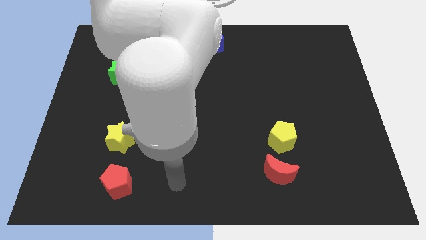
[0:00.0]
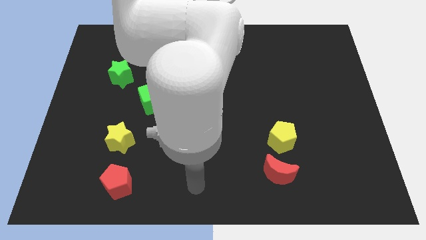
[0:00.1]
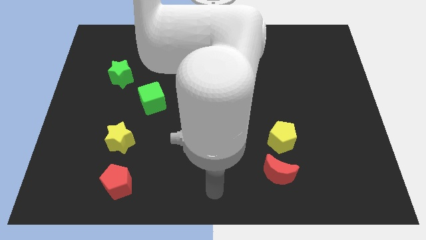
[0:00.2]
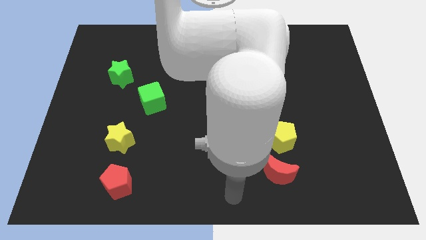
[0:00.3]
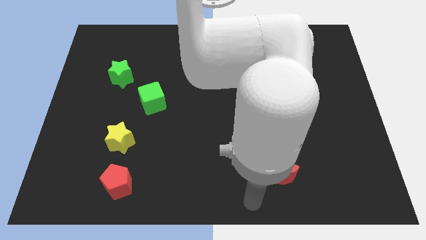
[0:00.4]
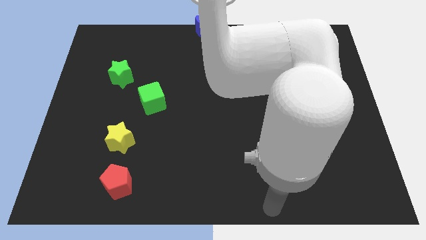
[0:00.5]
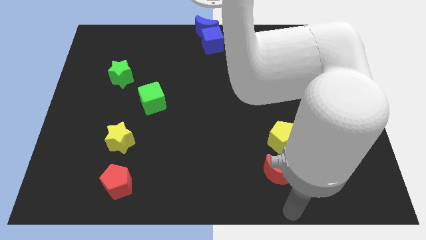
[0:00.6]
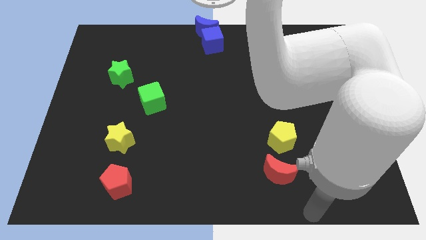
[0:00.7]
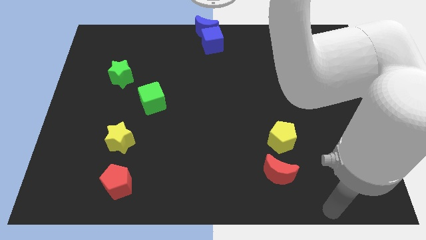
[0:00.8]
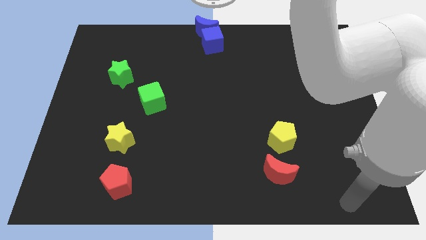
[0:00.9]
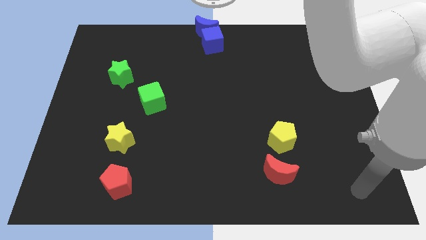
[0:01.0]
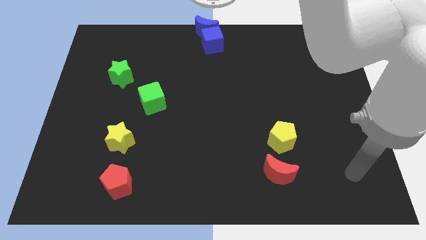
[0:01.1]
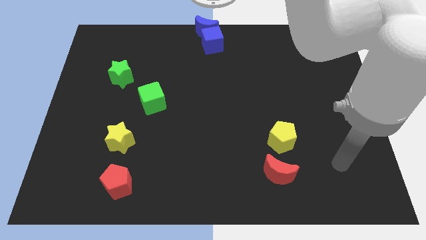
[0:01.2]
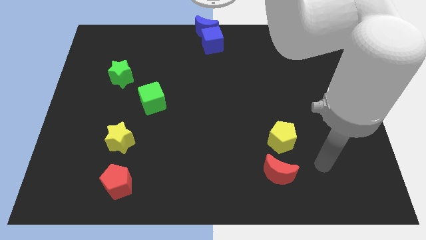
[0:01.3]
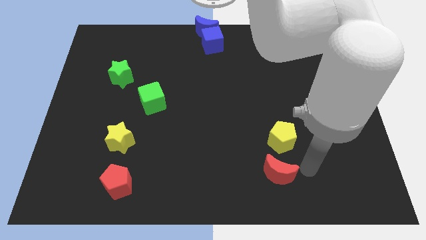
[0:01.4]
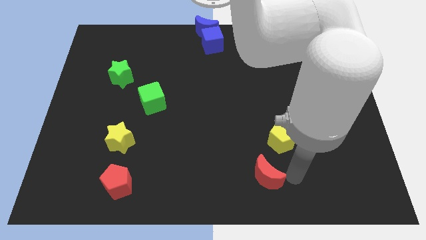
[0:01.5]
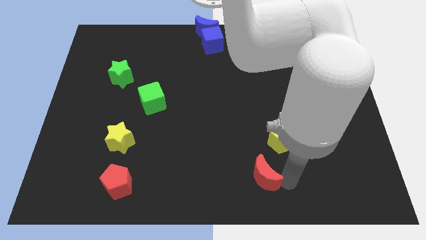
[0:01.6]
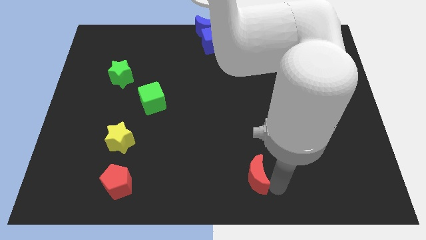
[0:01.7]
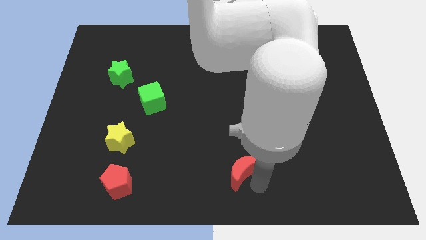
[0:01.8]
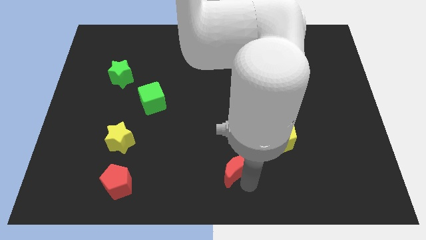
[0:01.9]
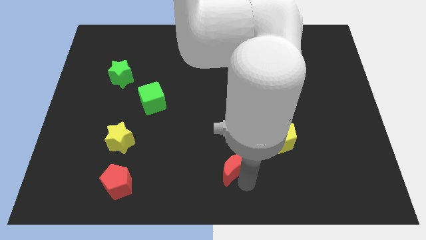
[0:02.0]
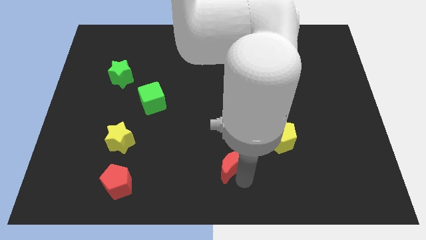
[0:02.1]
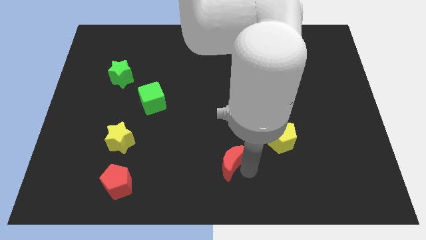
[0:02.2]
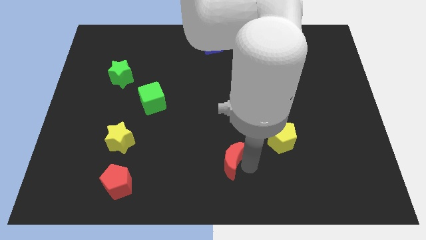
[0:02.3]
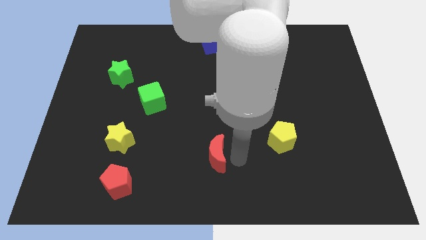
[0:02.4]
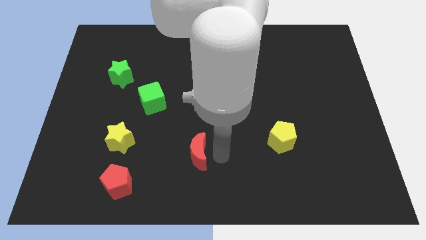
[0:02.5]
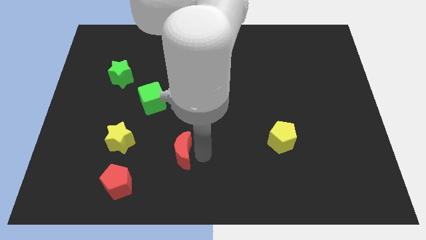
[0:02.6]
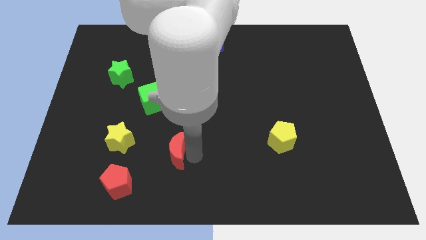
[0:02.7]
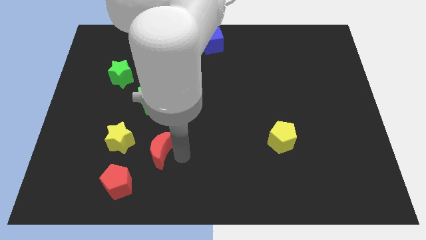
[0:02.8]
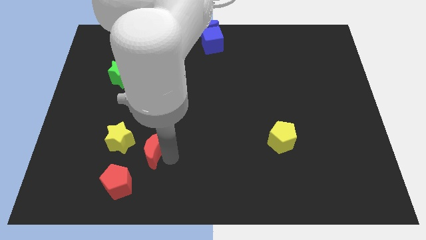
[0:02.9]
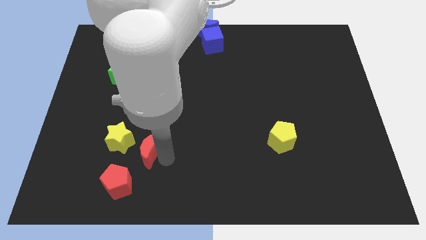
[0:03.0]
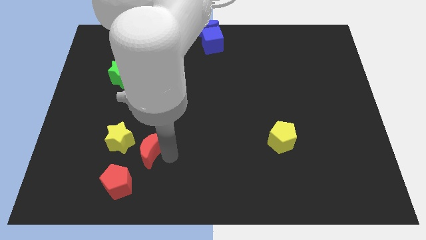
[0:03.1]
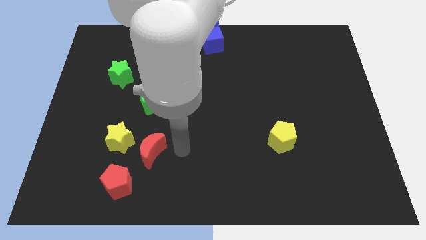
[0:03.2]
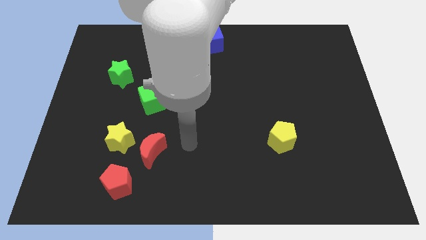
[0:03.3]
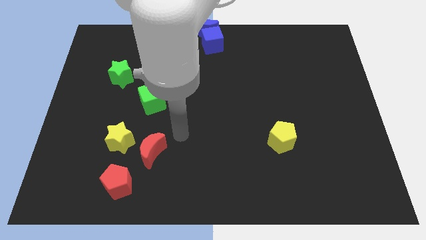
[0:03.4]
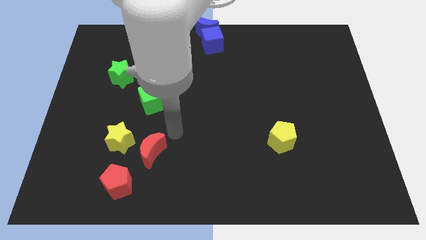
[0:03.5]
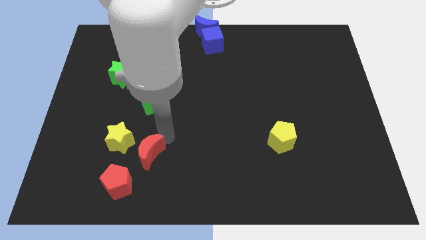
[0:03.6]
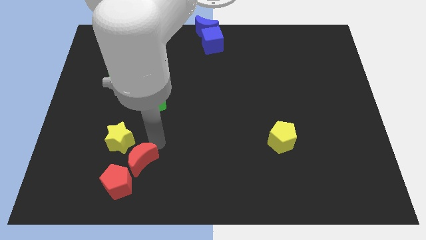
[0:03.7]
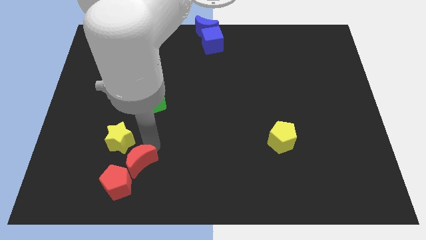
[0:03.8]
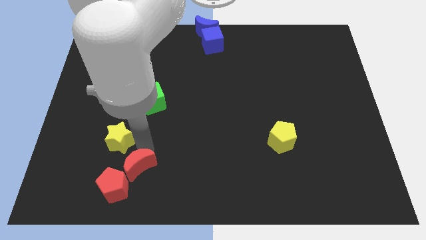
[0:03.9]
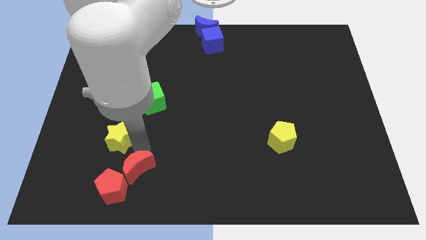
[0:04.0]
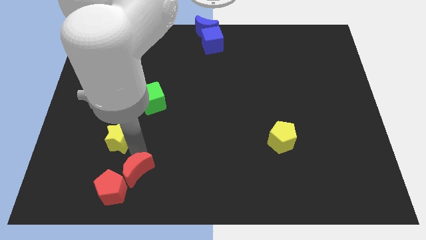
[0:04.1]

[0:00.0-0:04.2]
place the red crescent to the top right side of the red pentagon

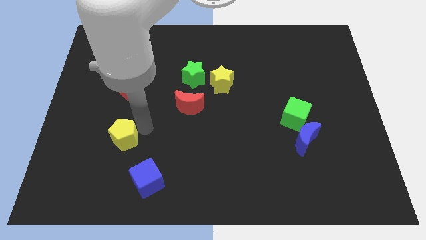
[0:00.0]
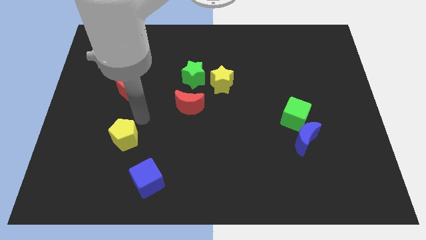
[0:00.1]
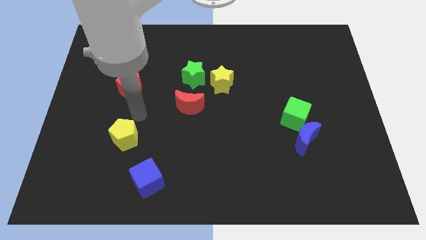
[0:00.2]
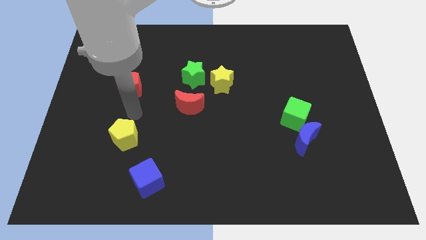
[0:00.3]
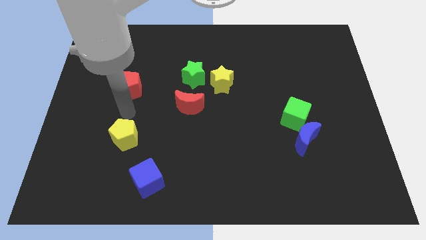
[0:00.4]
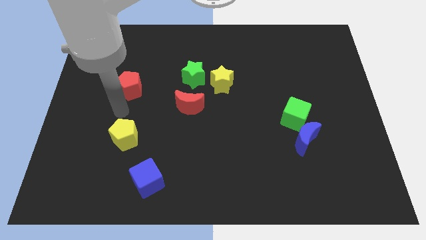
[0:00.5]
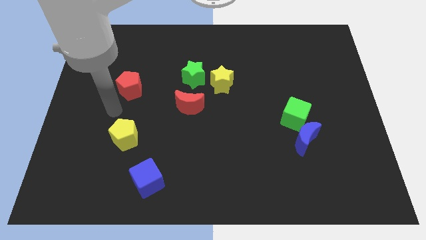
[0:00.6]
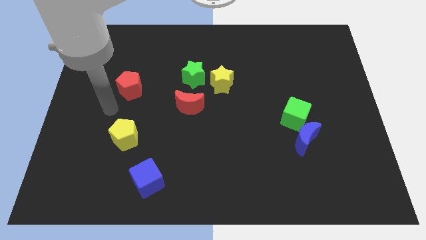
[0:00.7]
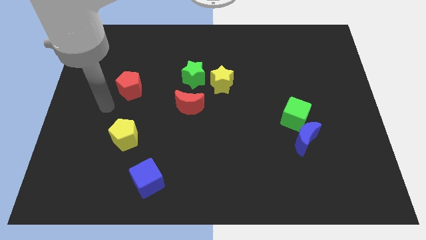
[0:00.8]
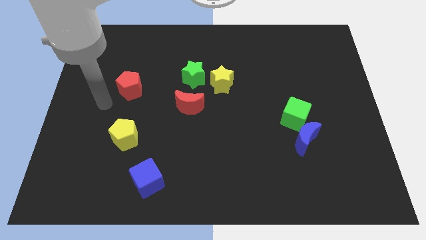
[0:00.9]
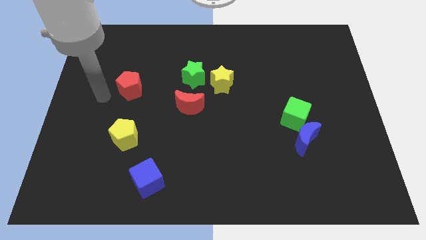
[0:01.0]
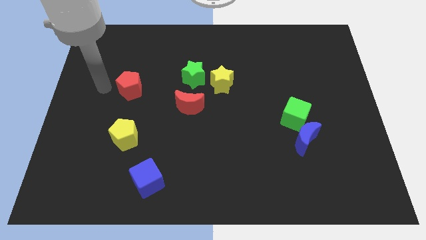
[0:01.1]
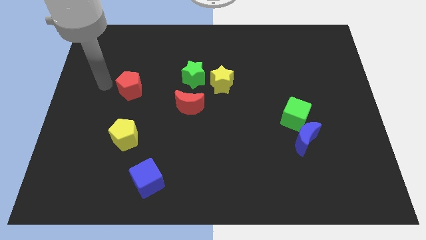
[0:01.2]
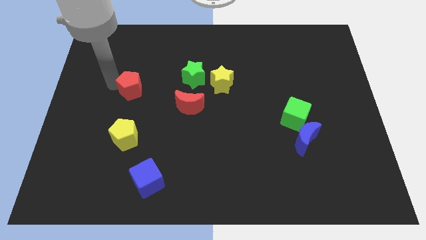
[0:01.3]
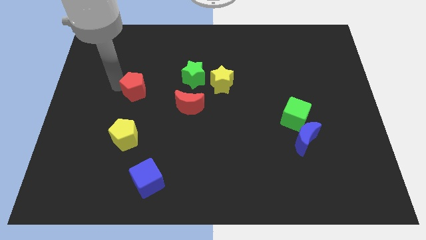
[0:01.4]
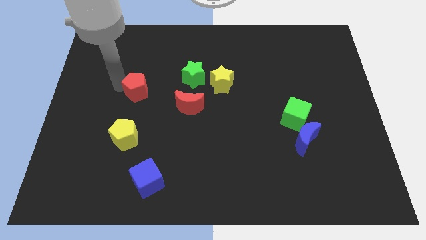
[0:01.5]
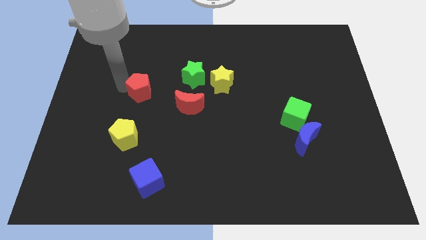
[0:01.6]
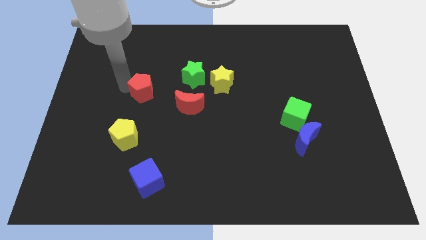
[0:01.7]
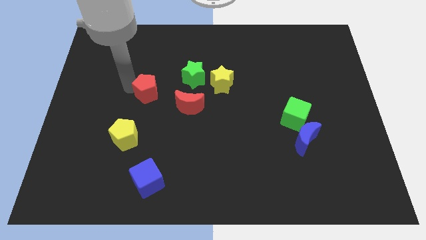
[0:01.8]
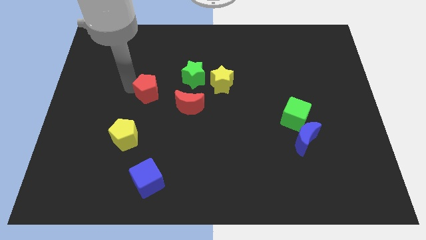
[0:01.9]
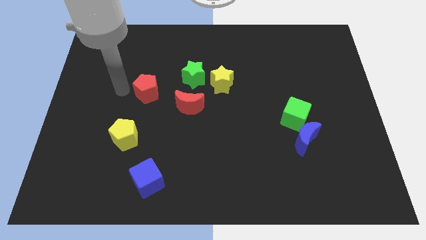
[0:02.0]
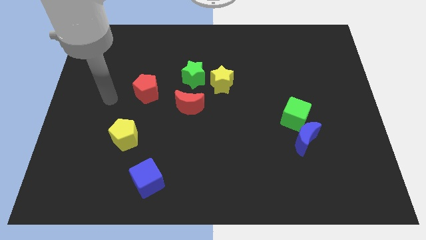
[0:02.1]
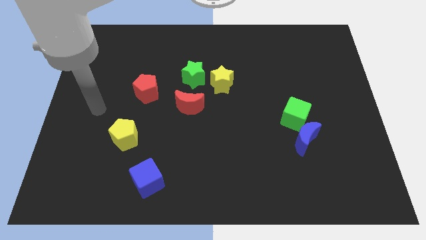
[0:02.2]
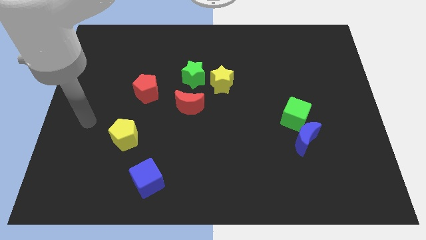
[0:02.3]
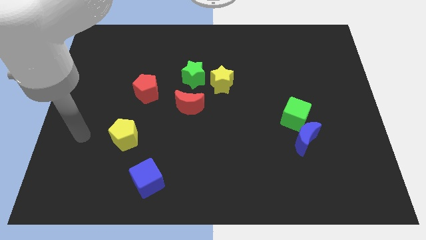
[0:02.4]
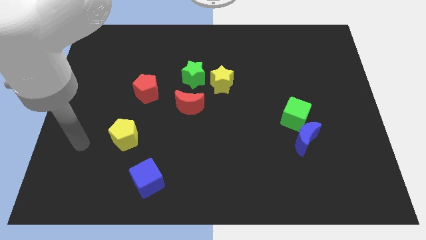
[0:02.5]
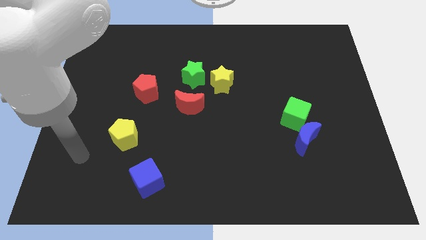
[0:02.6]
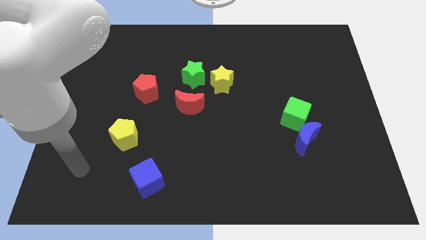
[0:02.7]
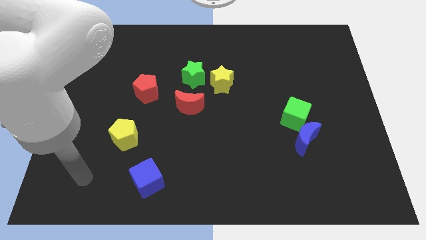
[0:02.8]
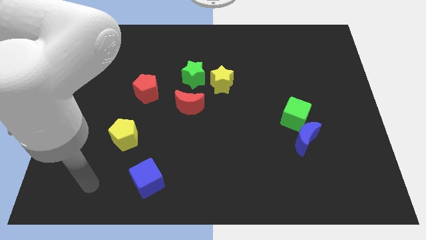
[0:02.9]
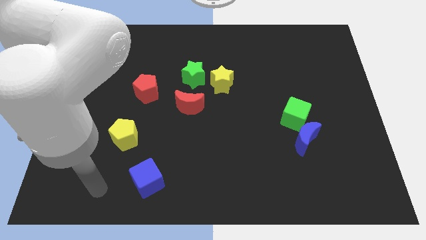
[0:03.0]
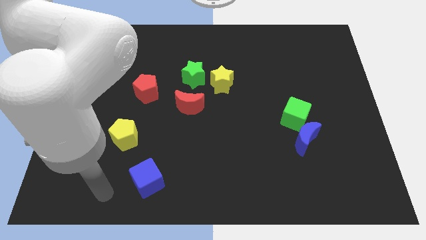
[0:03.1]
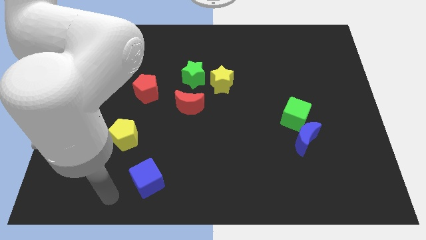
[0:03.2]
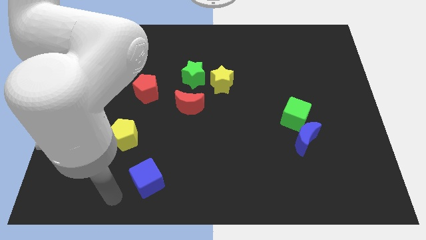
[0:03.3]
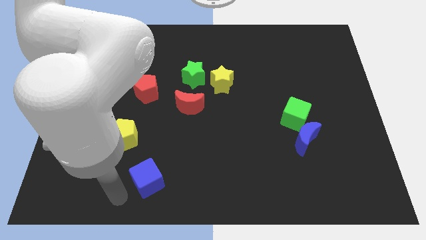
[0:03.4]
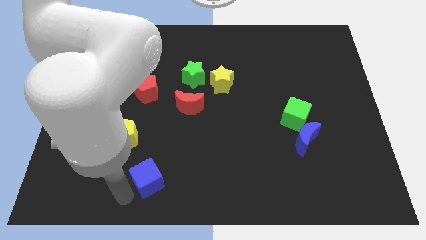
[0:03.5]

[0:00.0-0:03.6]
move the red pentagon slightly towards the red crescent

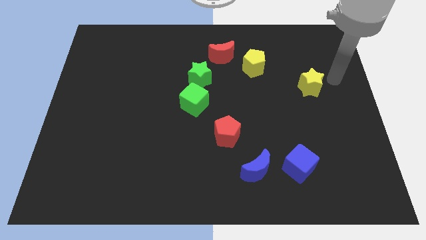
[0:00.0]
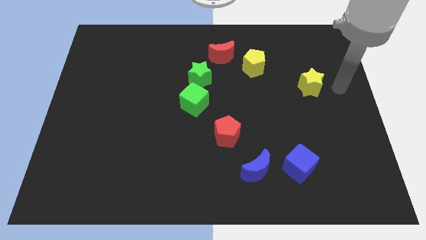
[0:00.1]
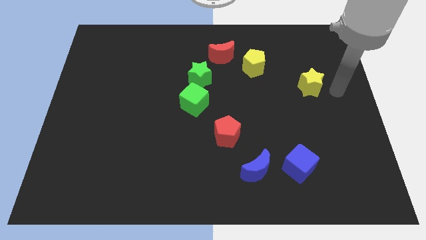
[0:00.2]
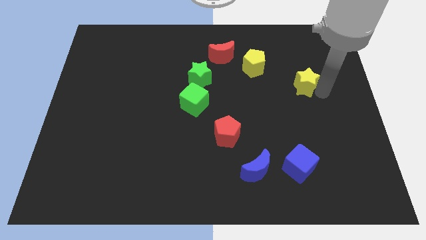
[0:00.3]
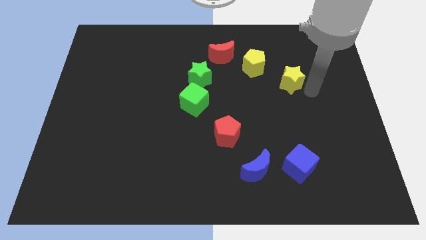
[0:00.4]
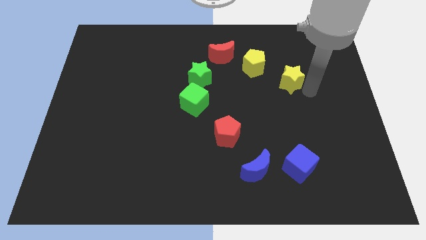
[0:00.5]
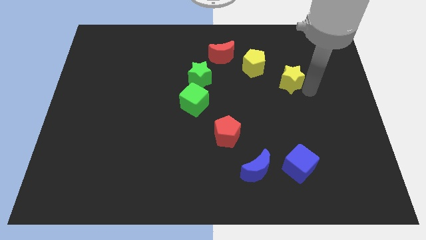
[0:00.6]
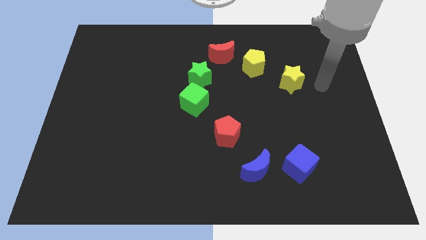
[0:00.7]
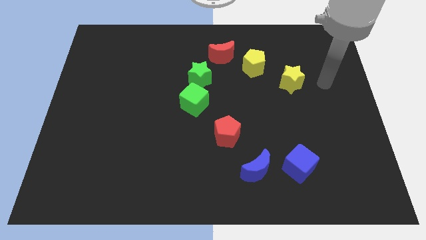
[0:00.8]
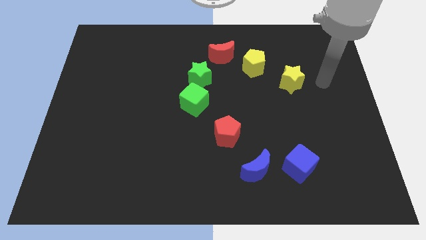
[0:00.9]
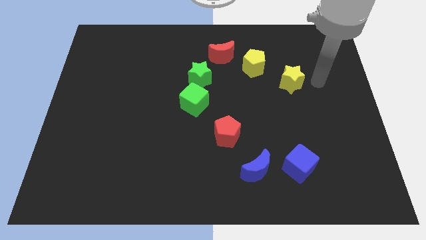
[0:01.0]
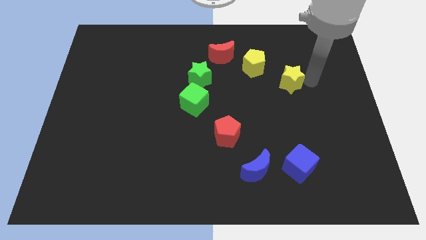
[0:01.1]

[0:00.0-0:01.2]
drag the yellow star towards the yellow pentagon

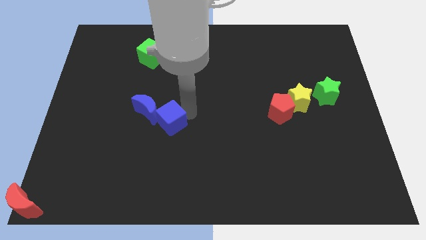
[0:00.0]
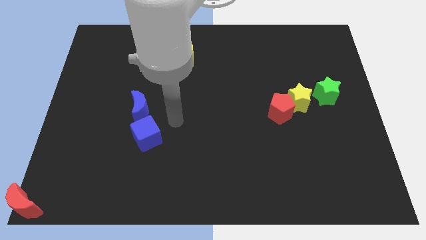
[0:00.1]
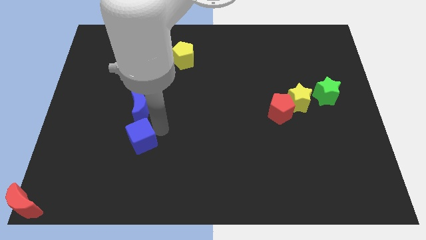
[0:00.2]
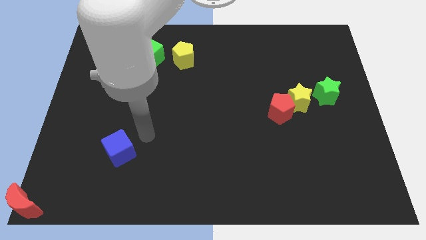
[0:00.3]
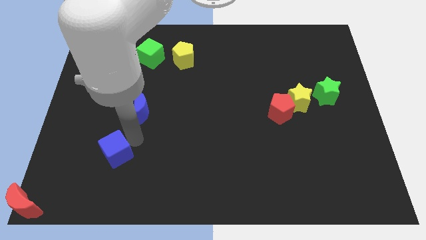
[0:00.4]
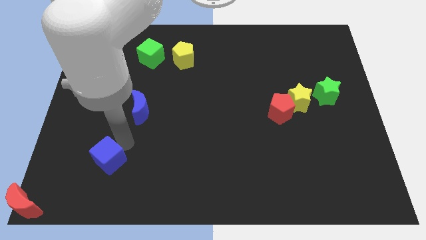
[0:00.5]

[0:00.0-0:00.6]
separate the blue cube from the blue crescent
